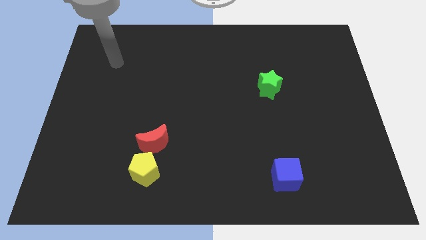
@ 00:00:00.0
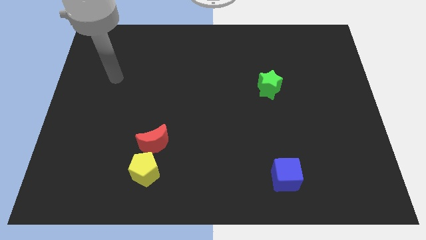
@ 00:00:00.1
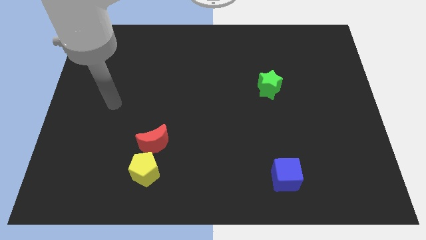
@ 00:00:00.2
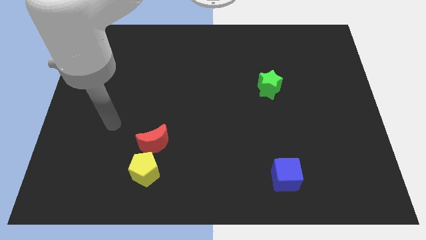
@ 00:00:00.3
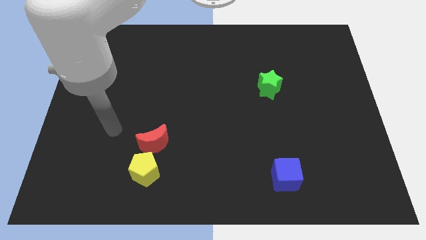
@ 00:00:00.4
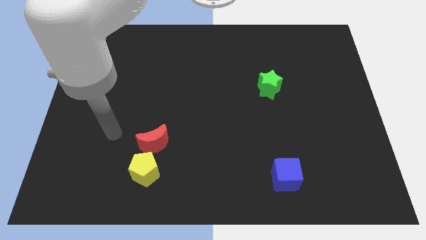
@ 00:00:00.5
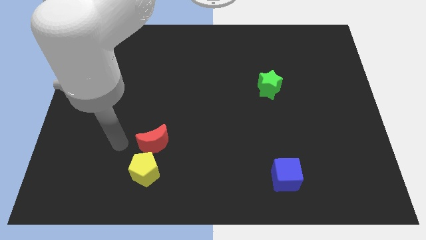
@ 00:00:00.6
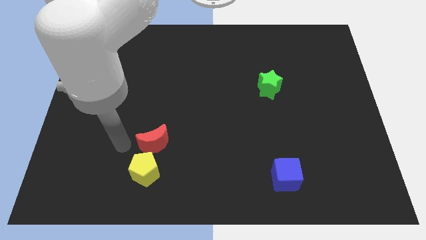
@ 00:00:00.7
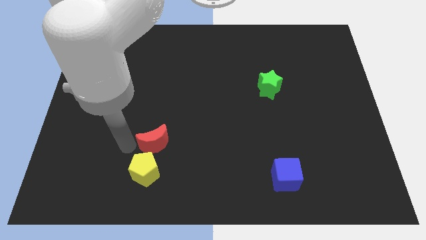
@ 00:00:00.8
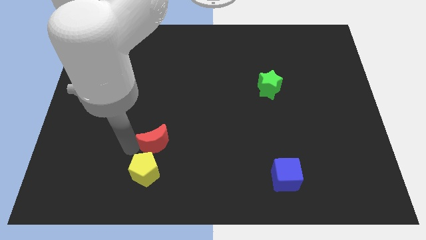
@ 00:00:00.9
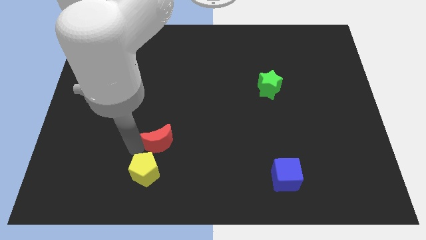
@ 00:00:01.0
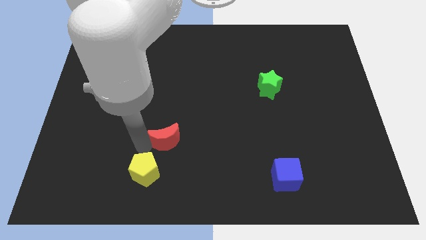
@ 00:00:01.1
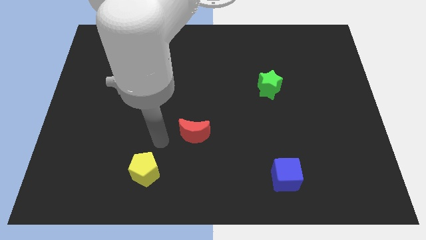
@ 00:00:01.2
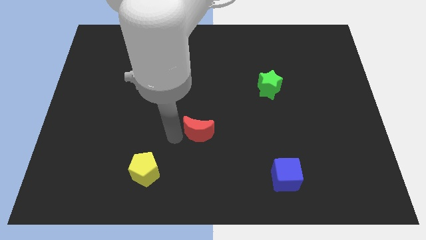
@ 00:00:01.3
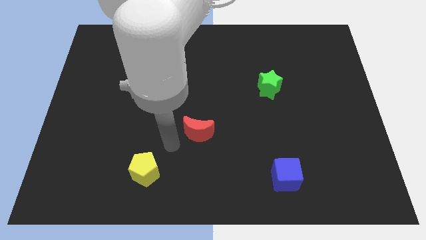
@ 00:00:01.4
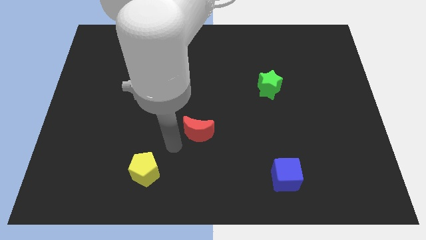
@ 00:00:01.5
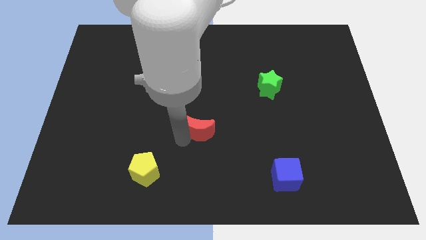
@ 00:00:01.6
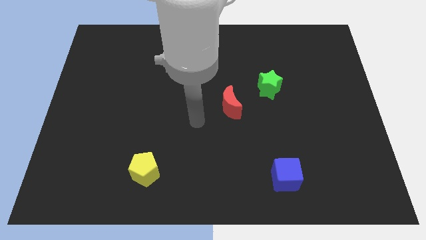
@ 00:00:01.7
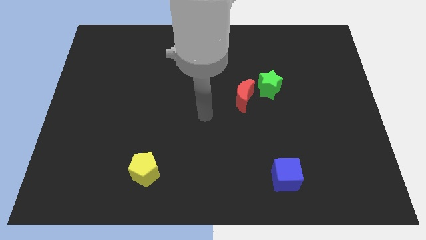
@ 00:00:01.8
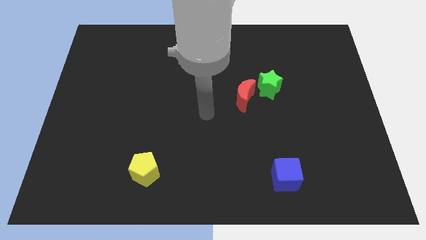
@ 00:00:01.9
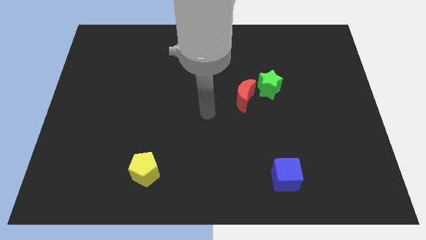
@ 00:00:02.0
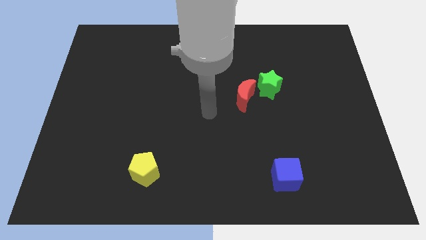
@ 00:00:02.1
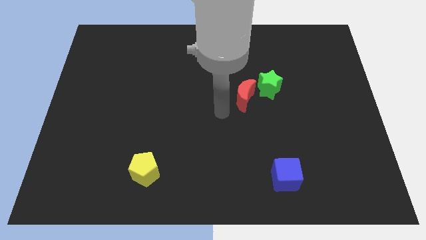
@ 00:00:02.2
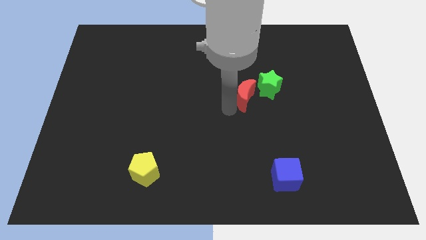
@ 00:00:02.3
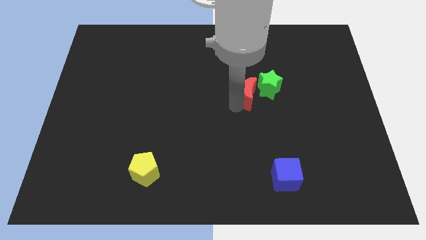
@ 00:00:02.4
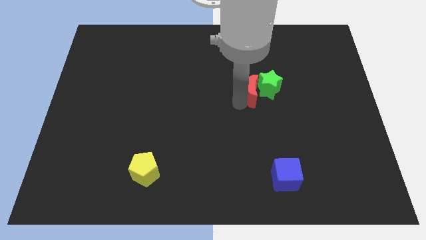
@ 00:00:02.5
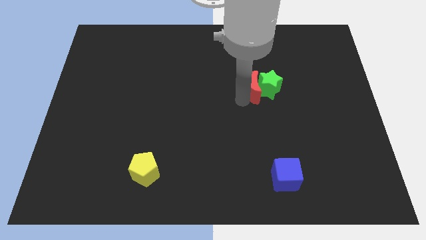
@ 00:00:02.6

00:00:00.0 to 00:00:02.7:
put the moon to the green block

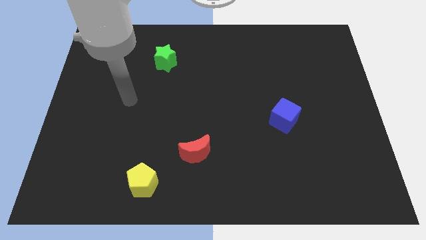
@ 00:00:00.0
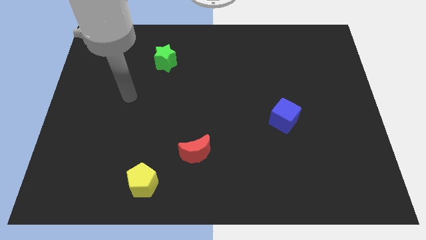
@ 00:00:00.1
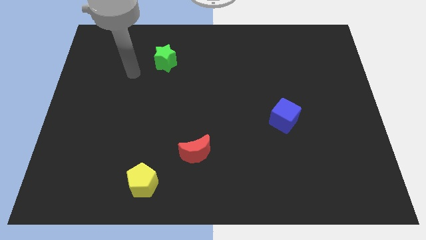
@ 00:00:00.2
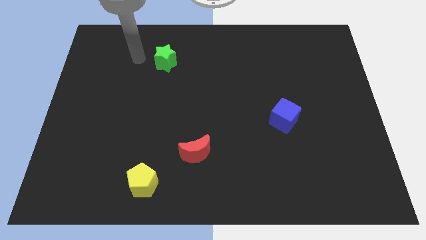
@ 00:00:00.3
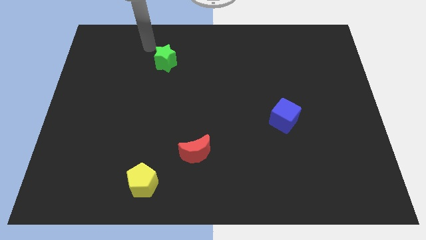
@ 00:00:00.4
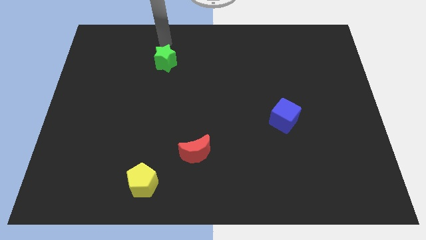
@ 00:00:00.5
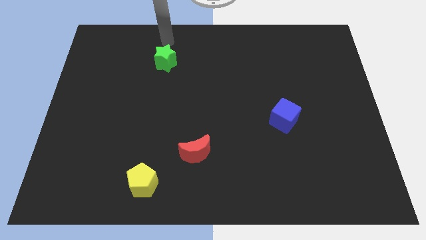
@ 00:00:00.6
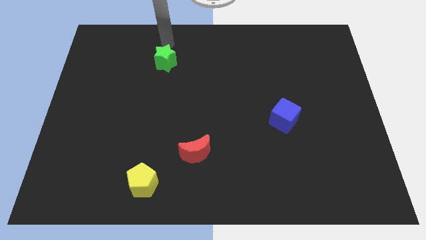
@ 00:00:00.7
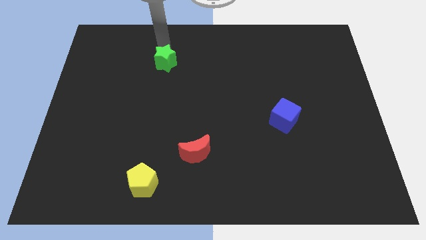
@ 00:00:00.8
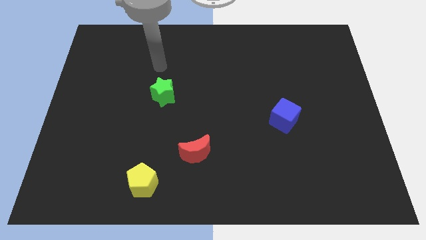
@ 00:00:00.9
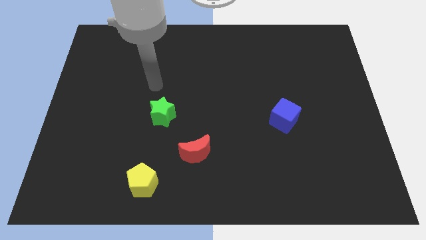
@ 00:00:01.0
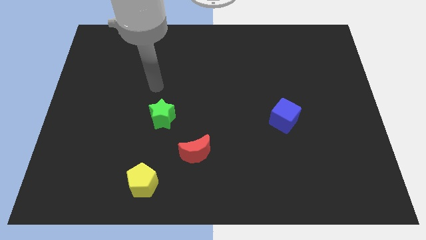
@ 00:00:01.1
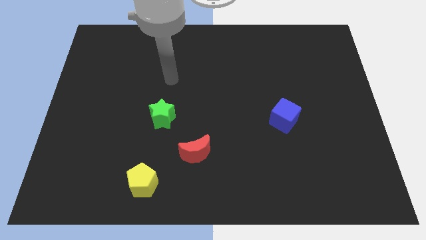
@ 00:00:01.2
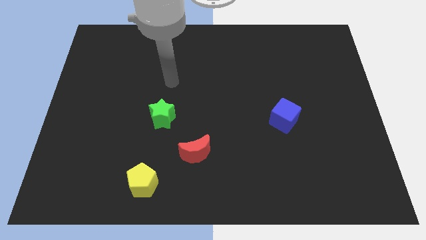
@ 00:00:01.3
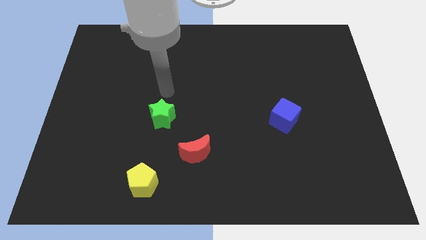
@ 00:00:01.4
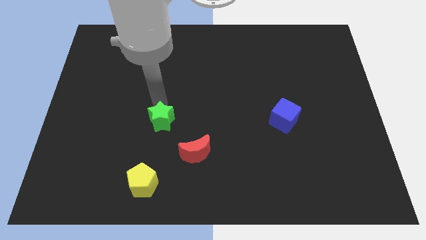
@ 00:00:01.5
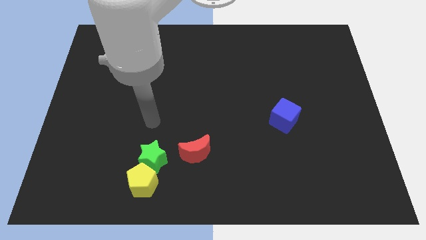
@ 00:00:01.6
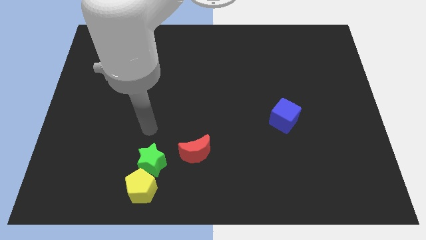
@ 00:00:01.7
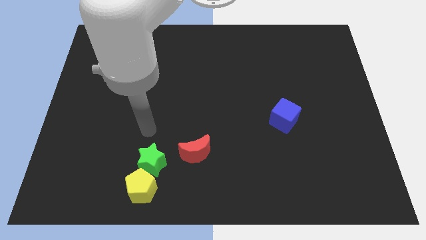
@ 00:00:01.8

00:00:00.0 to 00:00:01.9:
move the green star towards the yellow pentagon

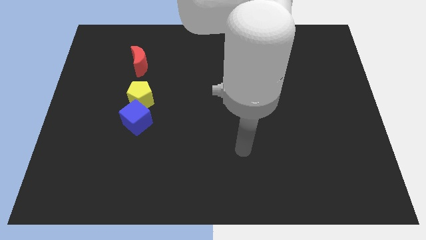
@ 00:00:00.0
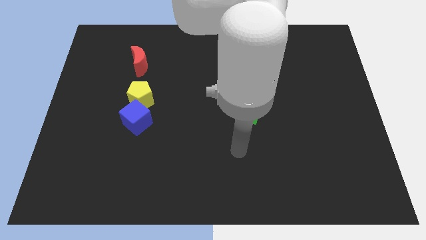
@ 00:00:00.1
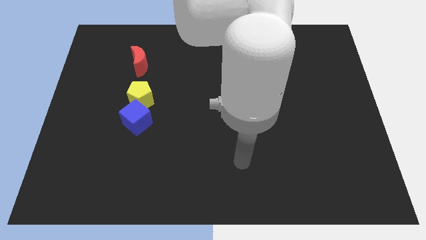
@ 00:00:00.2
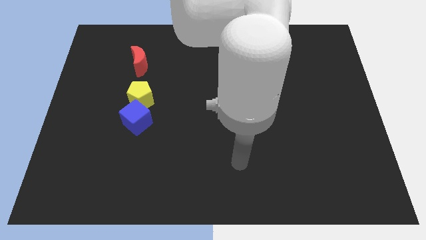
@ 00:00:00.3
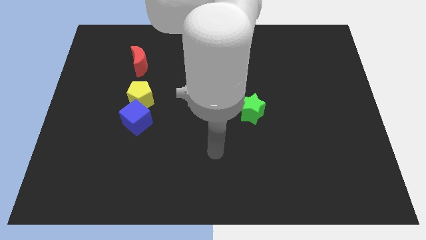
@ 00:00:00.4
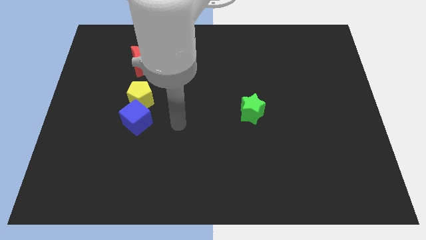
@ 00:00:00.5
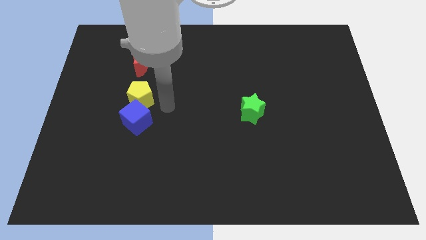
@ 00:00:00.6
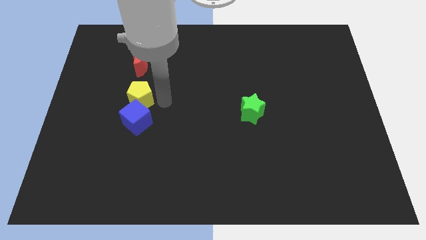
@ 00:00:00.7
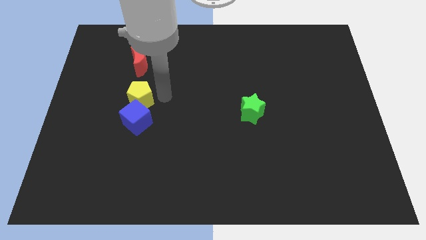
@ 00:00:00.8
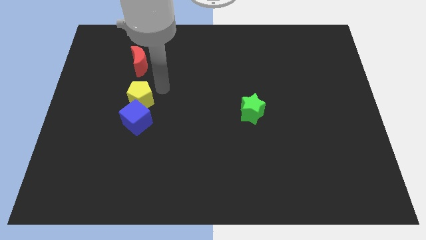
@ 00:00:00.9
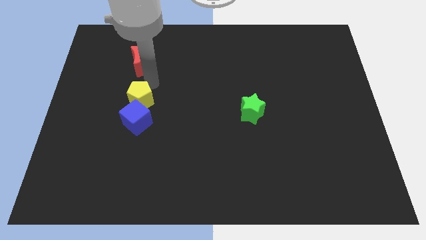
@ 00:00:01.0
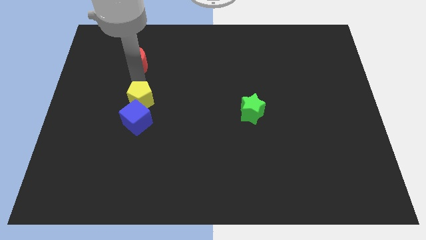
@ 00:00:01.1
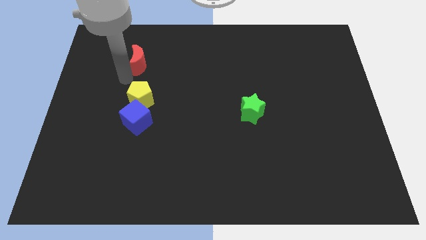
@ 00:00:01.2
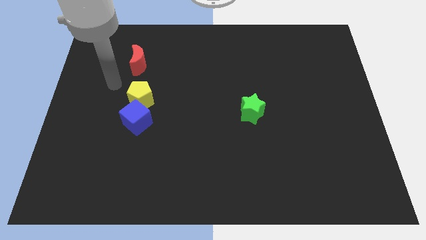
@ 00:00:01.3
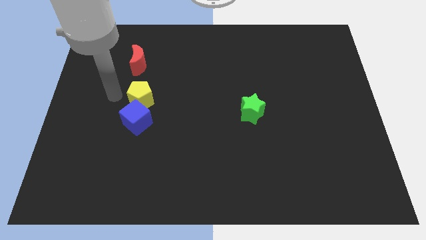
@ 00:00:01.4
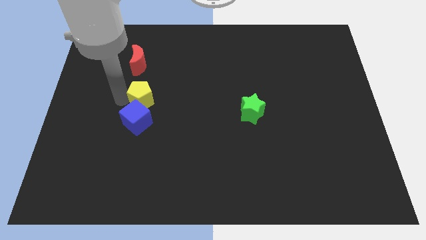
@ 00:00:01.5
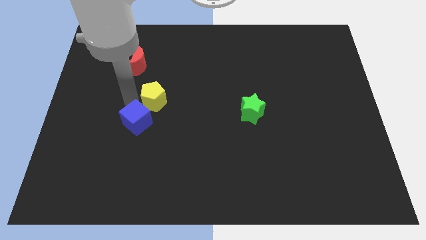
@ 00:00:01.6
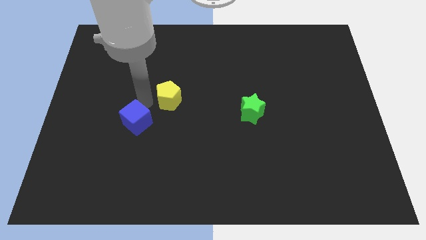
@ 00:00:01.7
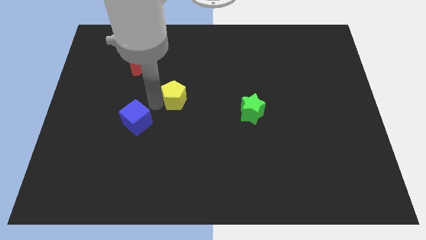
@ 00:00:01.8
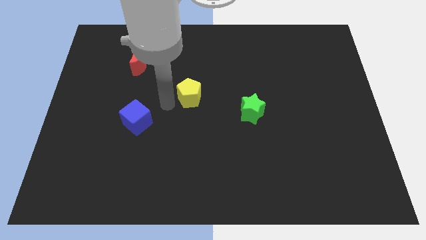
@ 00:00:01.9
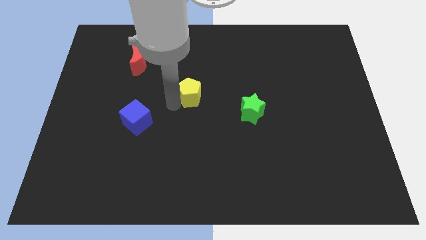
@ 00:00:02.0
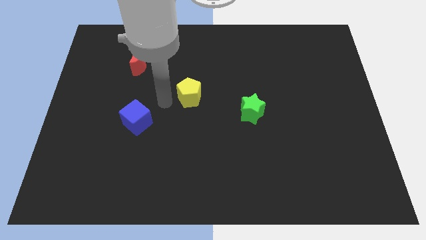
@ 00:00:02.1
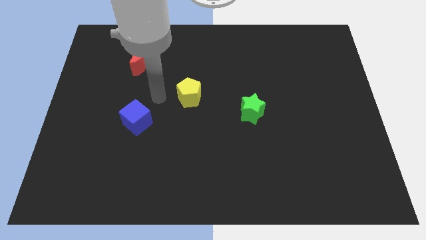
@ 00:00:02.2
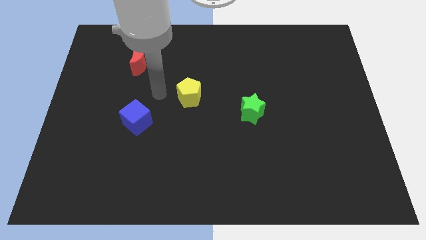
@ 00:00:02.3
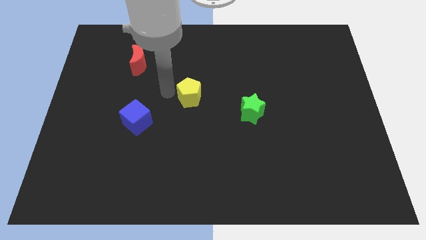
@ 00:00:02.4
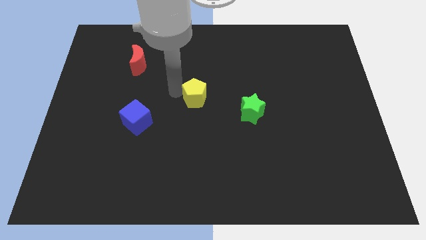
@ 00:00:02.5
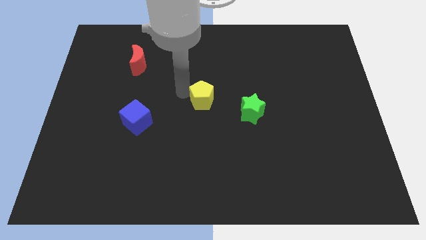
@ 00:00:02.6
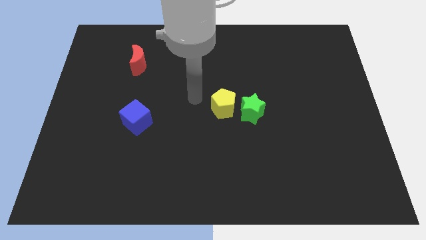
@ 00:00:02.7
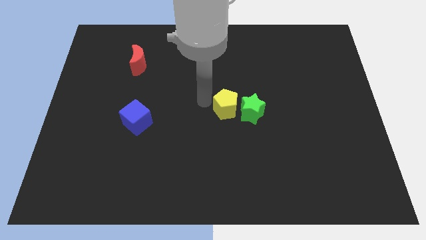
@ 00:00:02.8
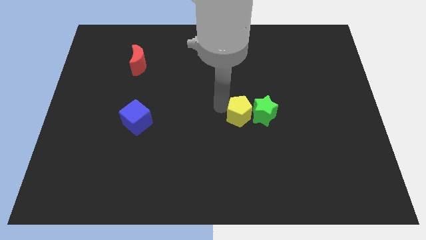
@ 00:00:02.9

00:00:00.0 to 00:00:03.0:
move the pentagon to the green star

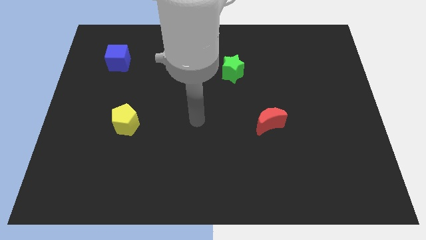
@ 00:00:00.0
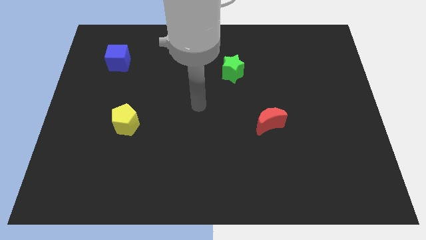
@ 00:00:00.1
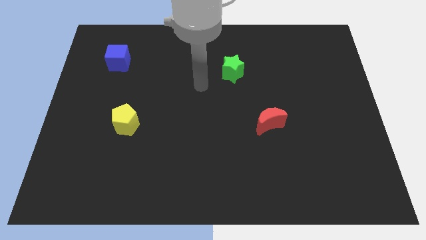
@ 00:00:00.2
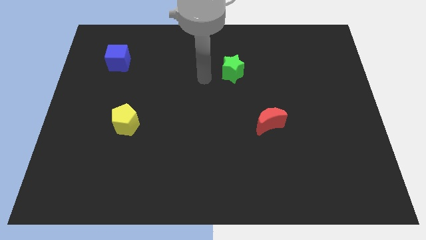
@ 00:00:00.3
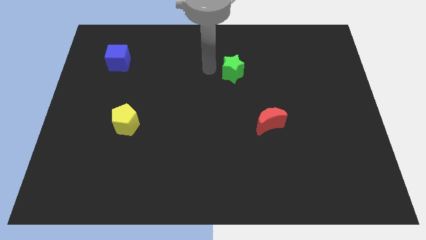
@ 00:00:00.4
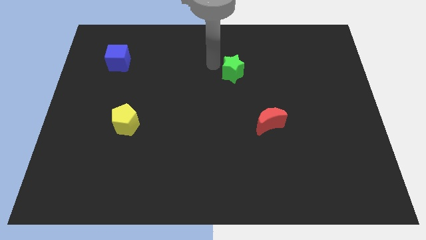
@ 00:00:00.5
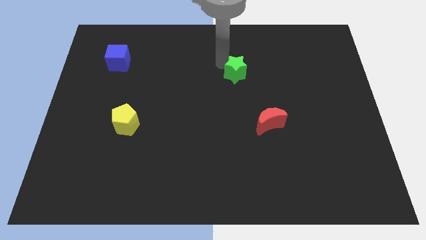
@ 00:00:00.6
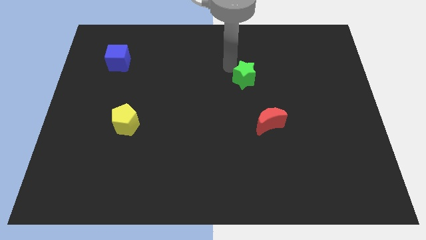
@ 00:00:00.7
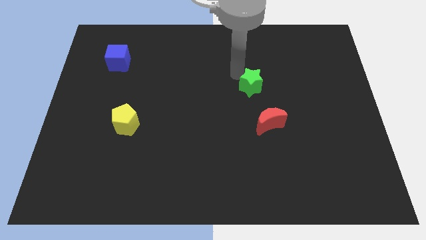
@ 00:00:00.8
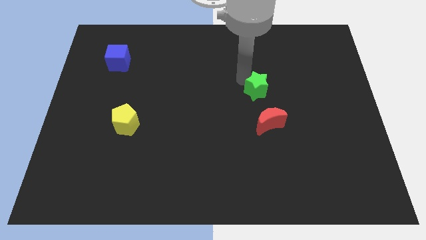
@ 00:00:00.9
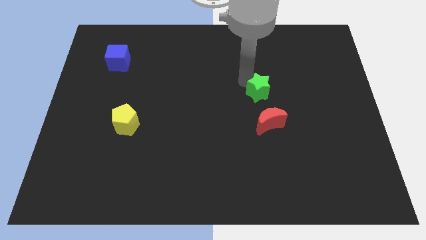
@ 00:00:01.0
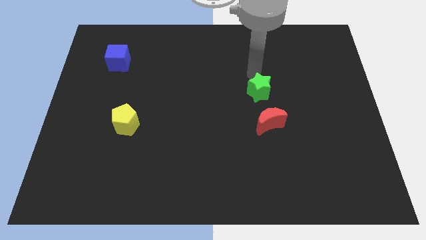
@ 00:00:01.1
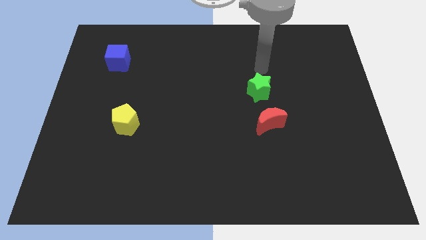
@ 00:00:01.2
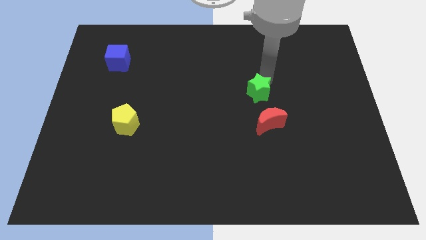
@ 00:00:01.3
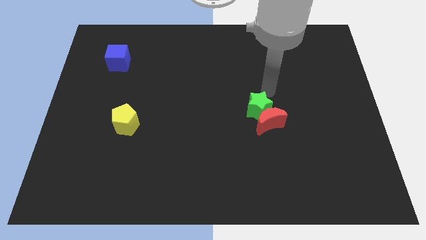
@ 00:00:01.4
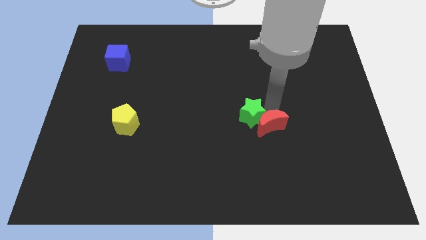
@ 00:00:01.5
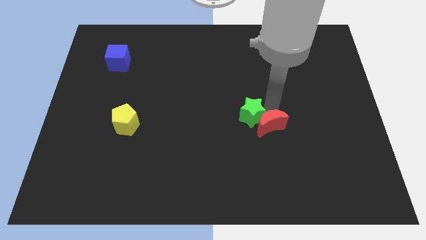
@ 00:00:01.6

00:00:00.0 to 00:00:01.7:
slide the green star next to the moon
